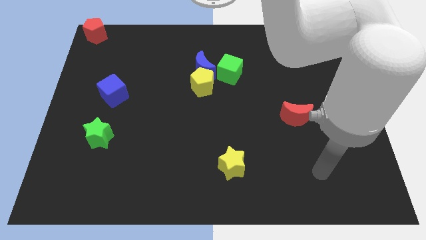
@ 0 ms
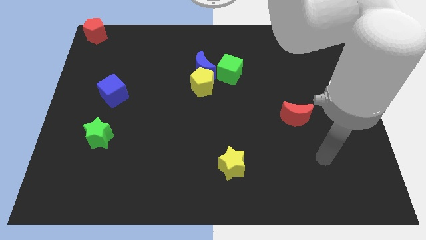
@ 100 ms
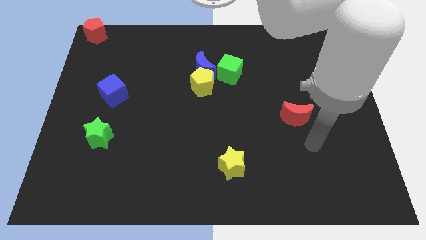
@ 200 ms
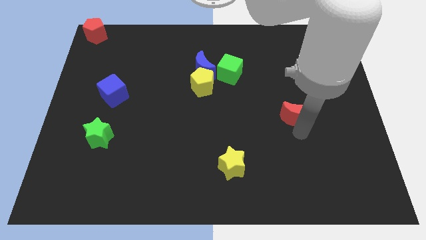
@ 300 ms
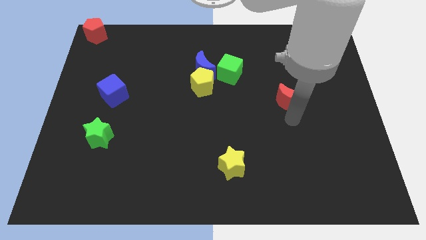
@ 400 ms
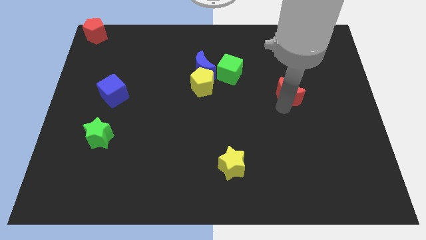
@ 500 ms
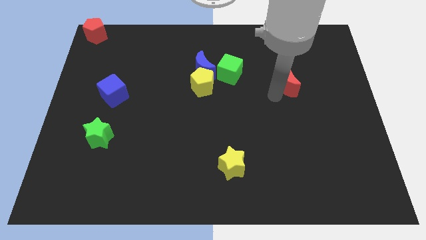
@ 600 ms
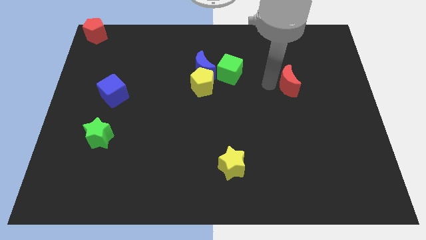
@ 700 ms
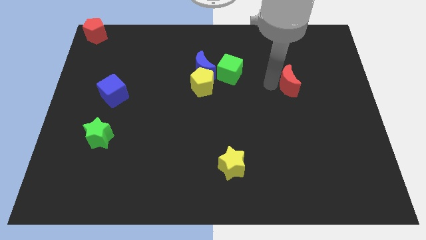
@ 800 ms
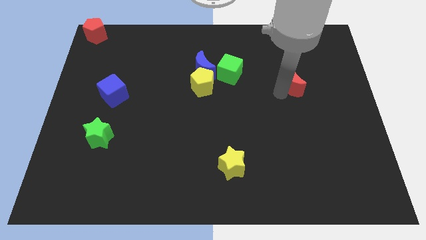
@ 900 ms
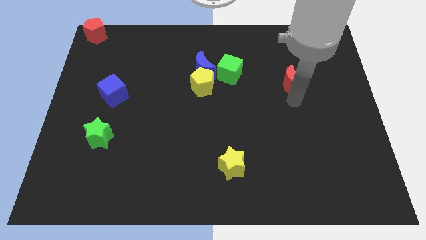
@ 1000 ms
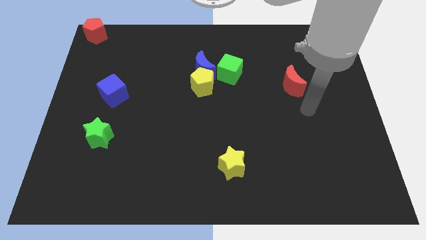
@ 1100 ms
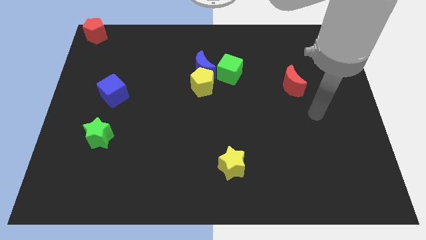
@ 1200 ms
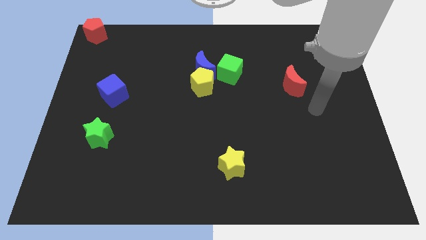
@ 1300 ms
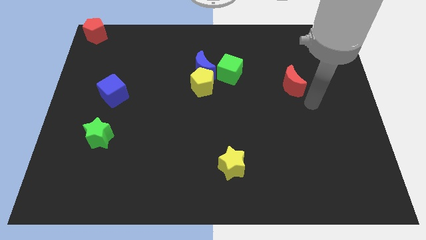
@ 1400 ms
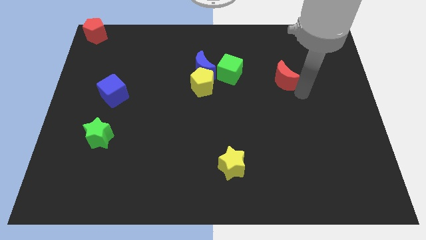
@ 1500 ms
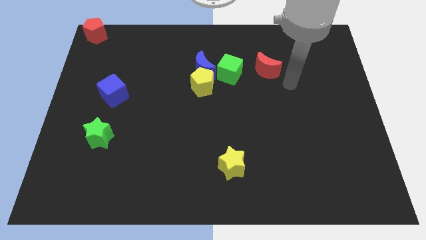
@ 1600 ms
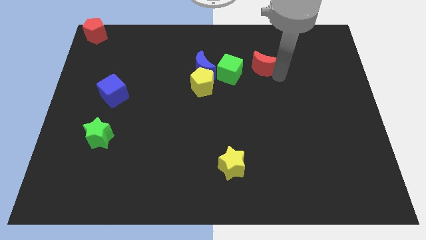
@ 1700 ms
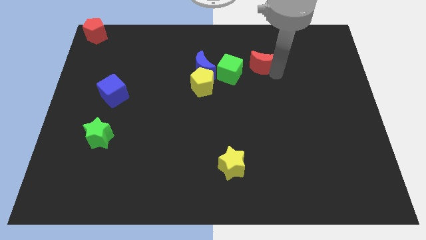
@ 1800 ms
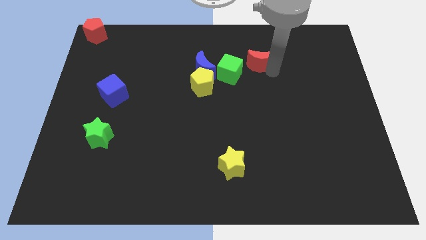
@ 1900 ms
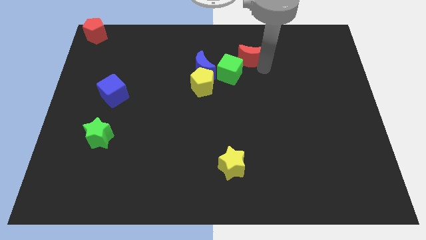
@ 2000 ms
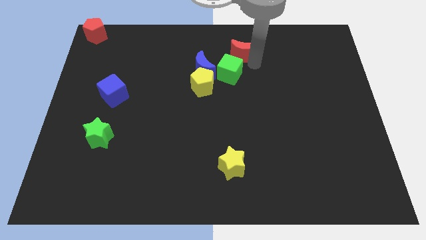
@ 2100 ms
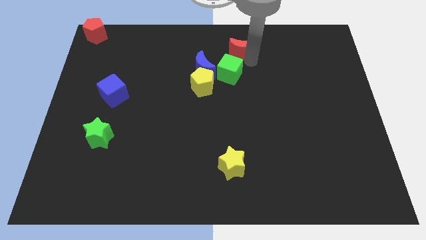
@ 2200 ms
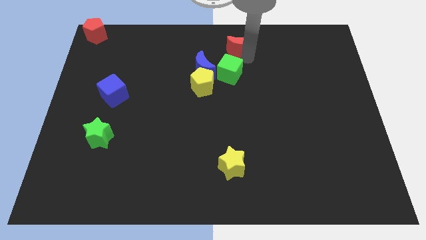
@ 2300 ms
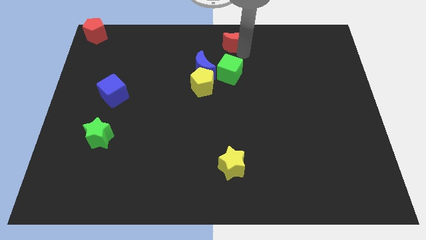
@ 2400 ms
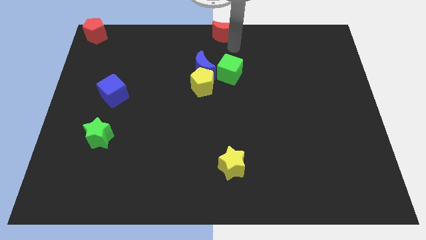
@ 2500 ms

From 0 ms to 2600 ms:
move the red crescent to the top center of the board

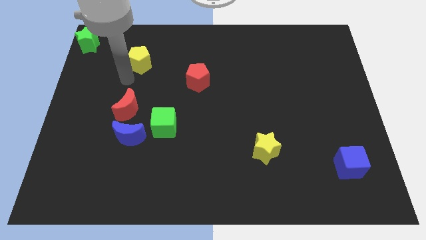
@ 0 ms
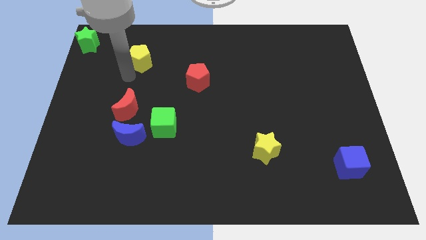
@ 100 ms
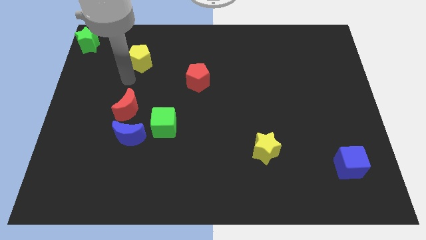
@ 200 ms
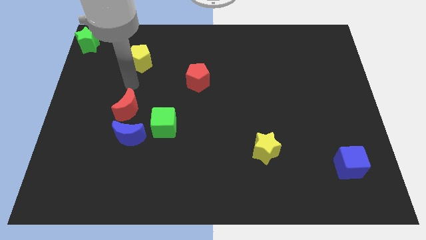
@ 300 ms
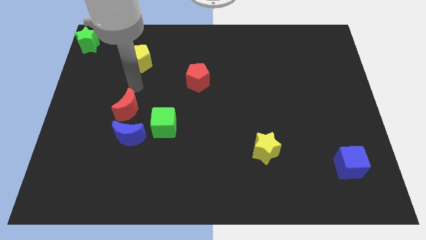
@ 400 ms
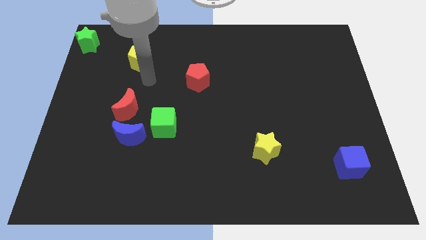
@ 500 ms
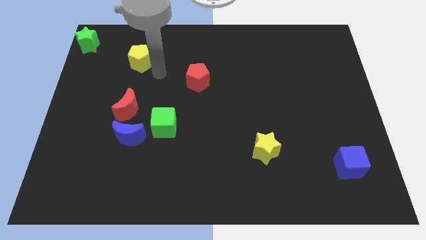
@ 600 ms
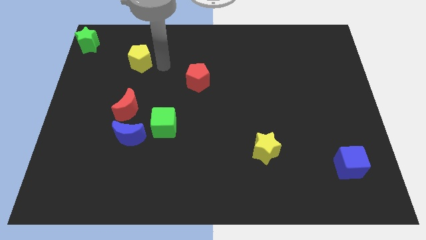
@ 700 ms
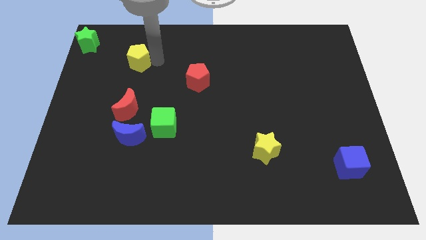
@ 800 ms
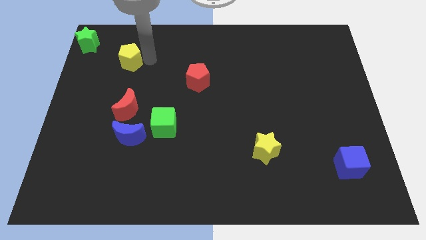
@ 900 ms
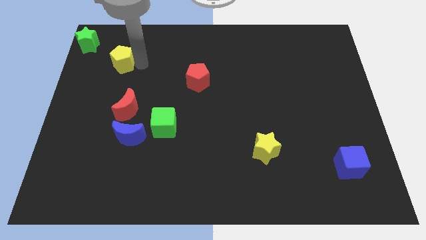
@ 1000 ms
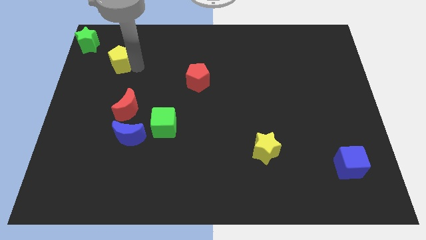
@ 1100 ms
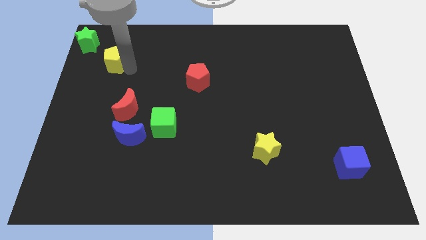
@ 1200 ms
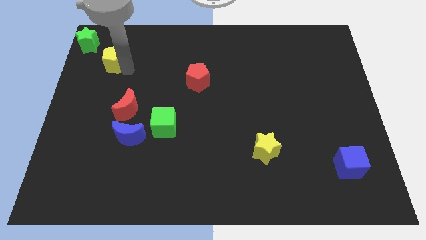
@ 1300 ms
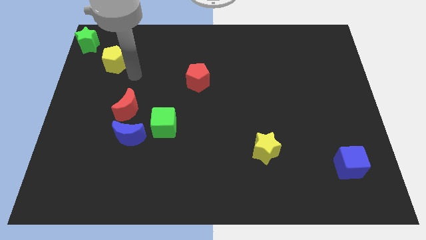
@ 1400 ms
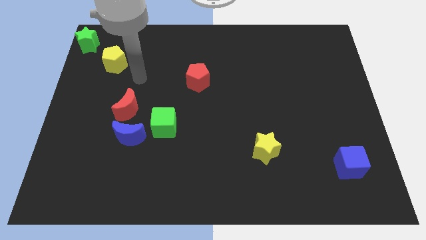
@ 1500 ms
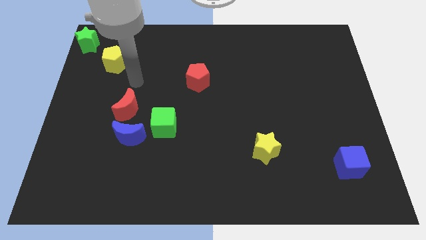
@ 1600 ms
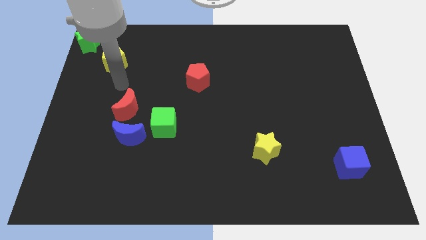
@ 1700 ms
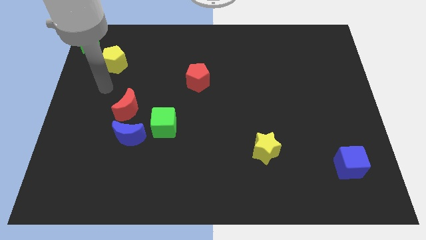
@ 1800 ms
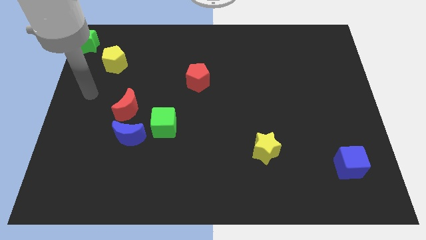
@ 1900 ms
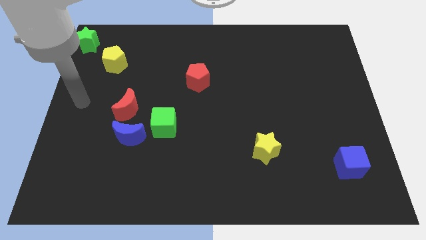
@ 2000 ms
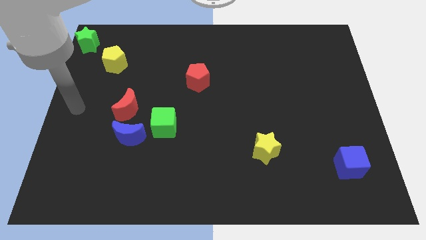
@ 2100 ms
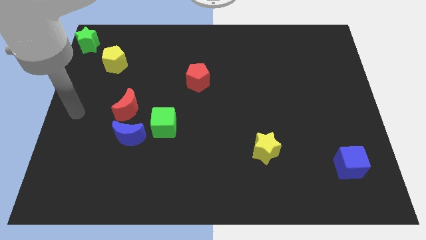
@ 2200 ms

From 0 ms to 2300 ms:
place yellow pentagon bottom right to green star

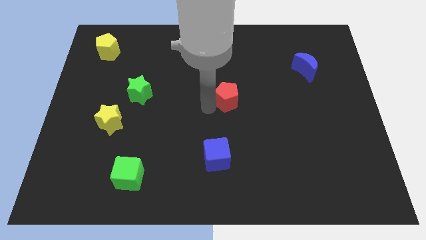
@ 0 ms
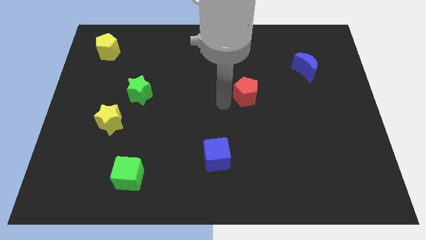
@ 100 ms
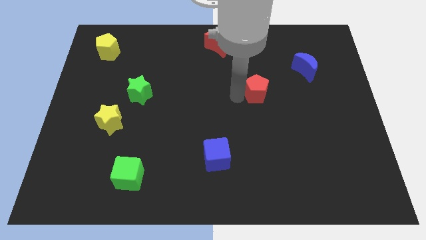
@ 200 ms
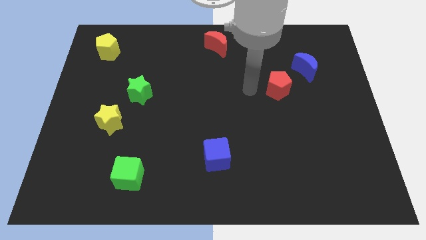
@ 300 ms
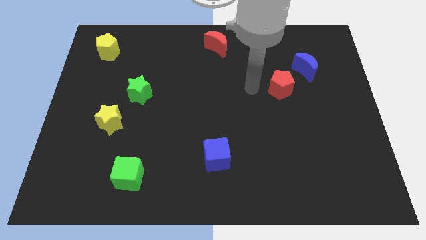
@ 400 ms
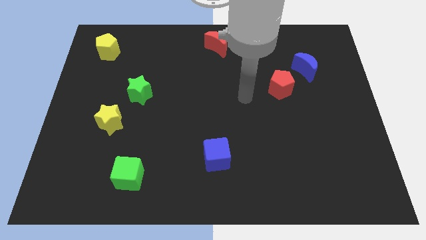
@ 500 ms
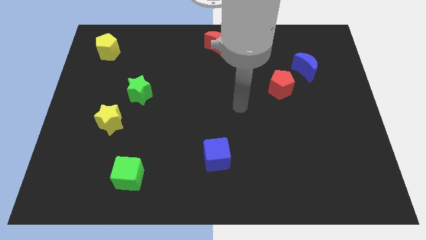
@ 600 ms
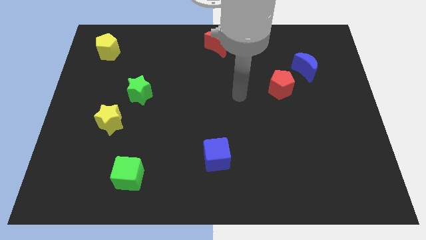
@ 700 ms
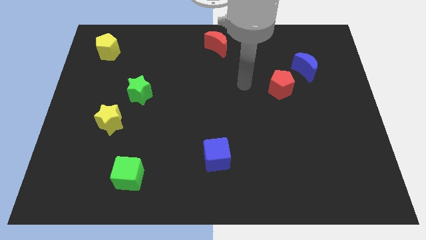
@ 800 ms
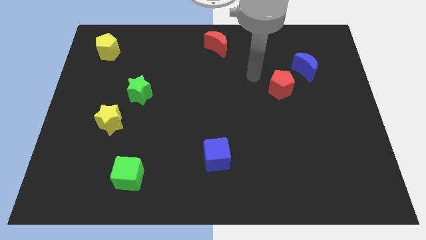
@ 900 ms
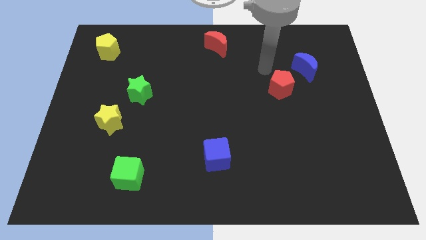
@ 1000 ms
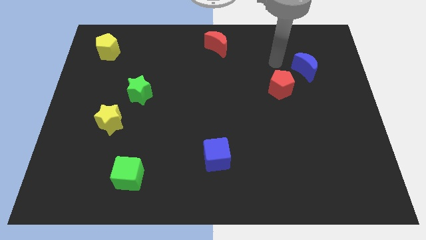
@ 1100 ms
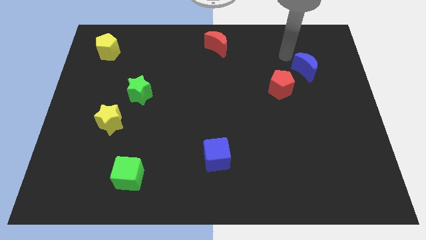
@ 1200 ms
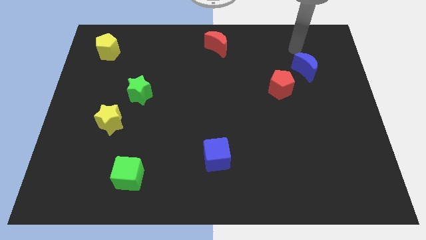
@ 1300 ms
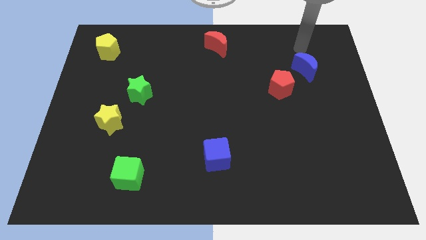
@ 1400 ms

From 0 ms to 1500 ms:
move the red pentagon towards the blue crescent

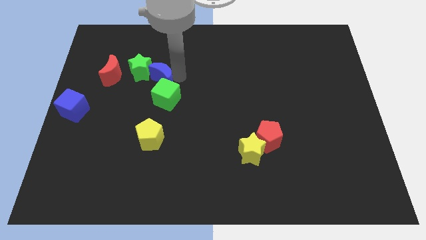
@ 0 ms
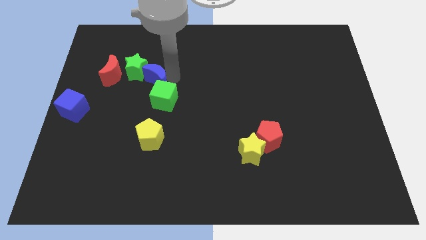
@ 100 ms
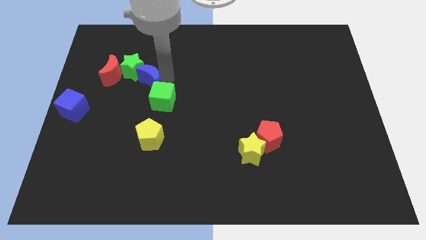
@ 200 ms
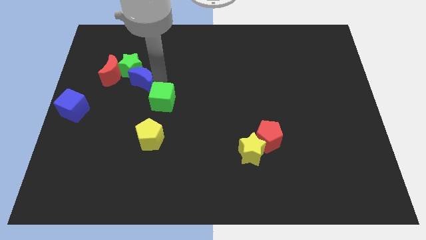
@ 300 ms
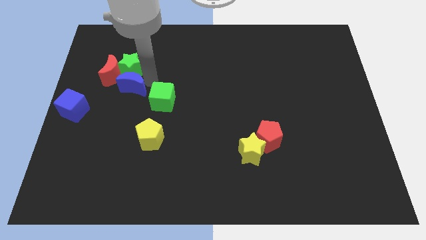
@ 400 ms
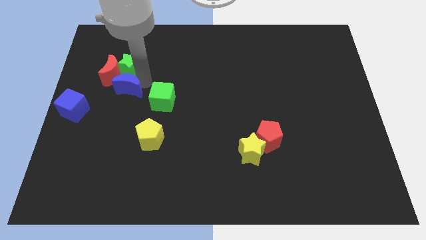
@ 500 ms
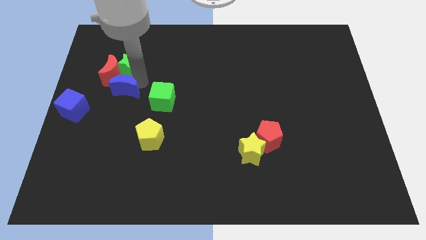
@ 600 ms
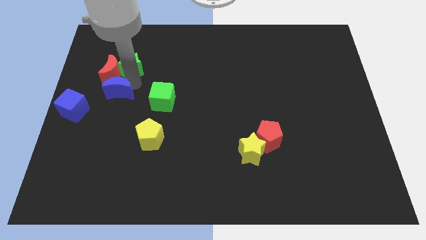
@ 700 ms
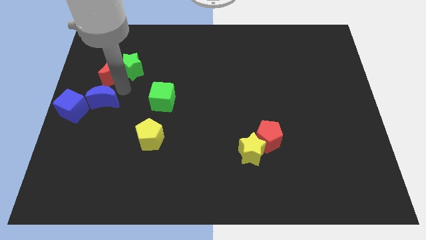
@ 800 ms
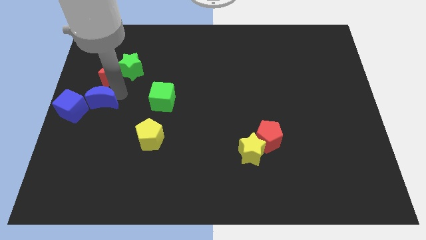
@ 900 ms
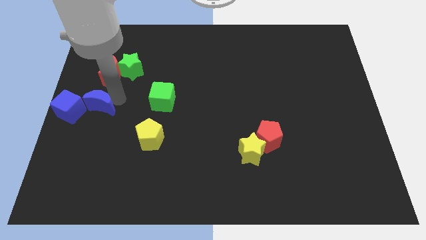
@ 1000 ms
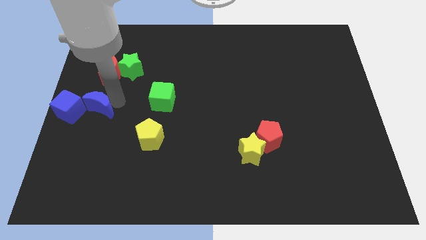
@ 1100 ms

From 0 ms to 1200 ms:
move blue moon into blue cube

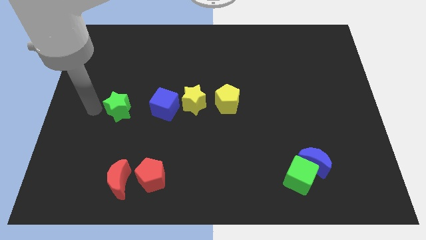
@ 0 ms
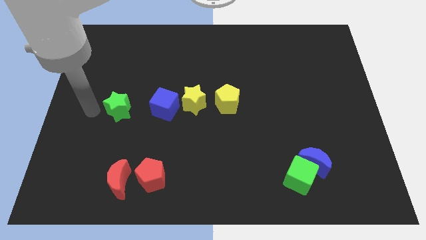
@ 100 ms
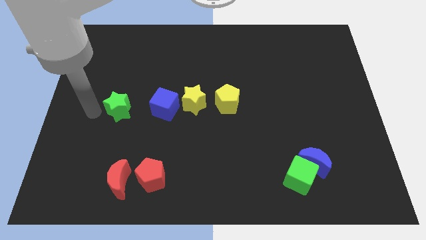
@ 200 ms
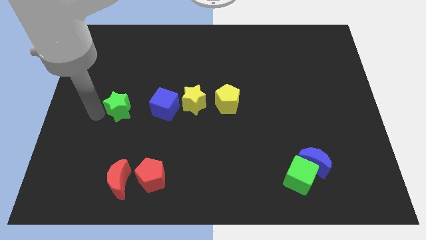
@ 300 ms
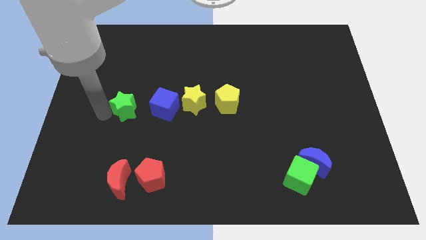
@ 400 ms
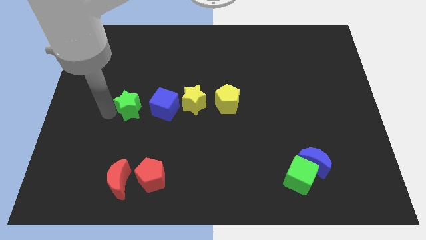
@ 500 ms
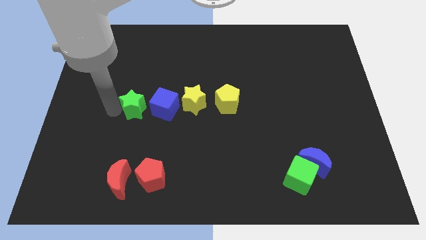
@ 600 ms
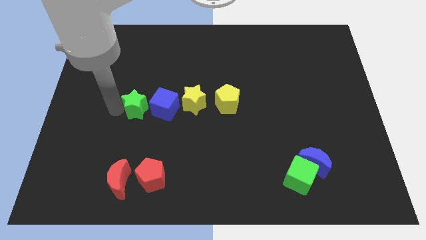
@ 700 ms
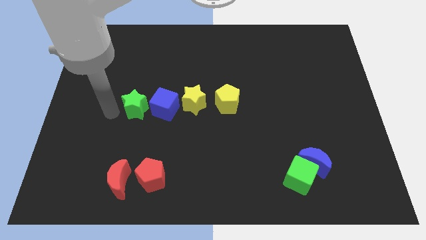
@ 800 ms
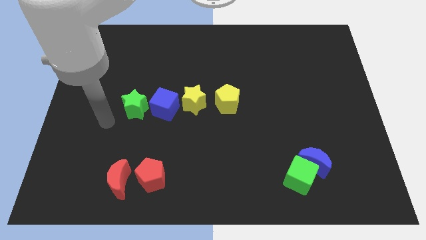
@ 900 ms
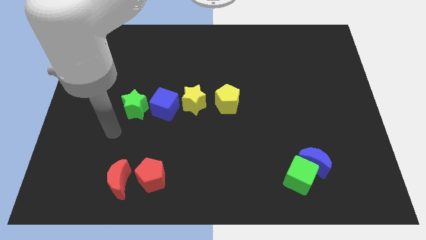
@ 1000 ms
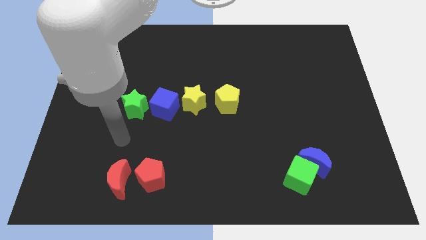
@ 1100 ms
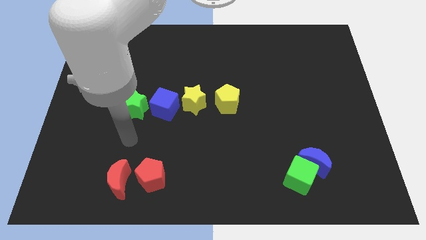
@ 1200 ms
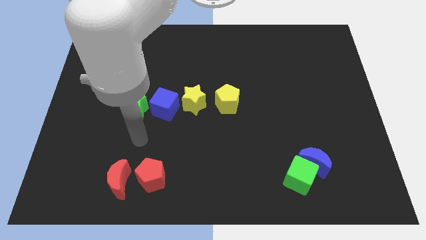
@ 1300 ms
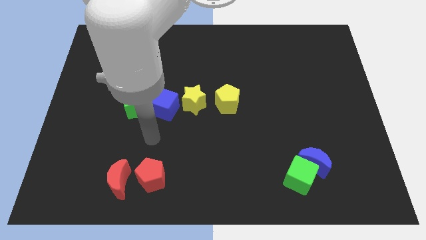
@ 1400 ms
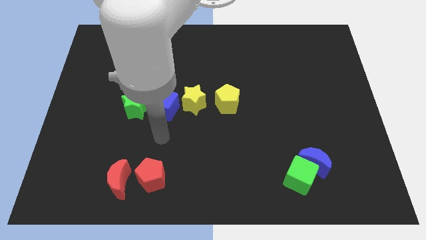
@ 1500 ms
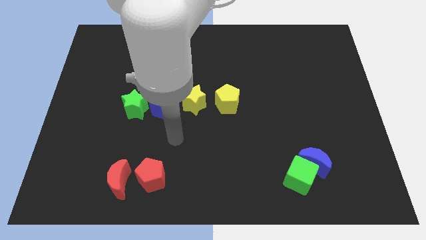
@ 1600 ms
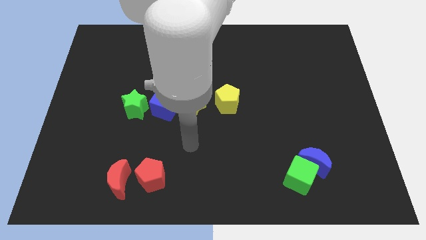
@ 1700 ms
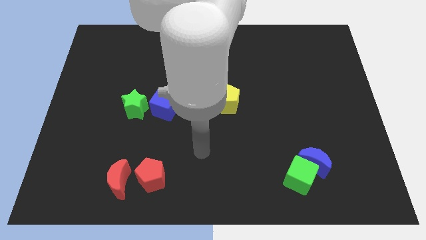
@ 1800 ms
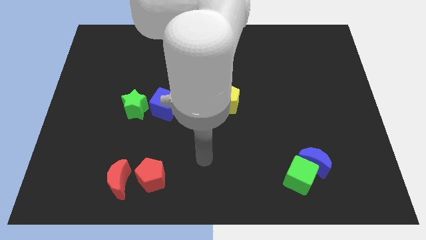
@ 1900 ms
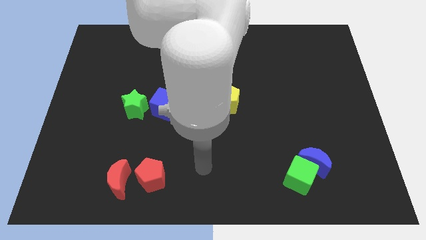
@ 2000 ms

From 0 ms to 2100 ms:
move the green star to the left of the blue cube
